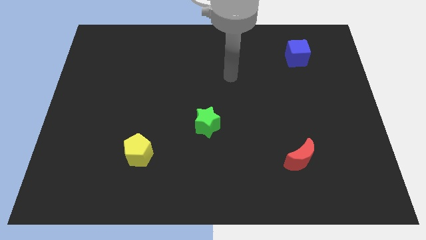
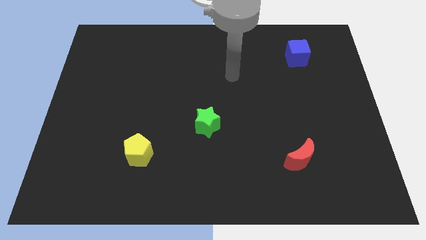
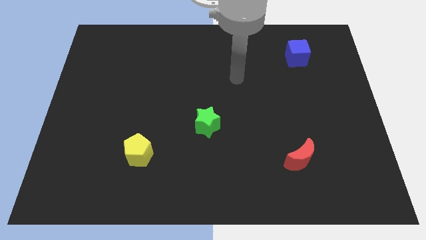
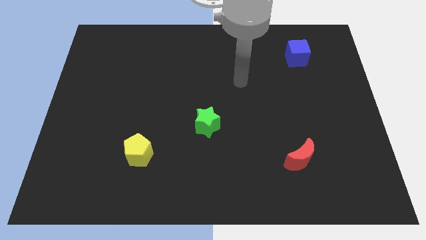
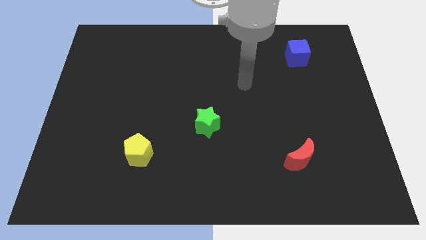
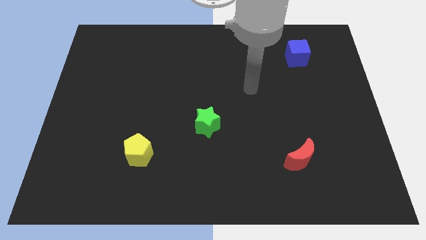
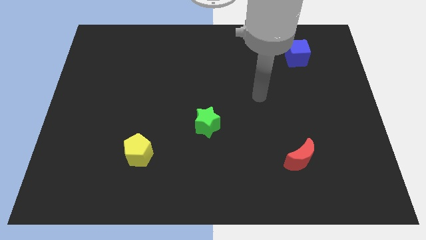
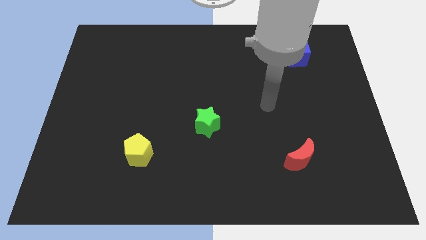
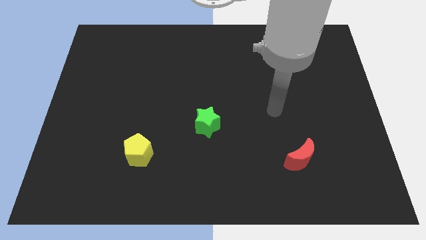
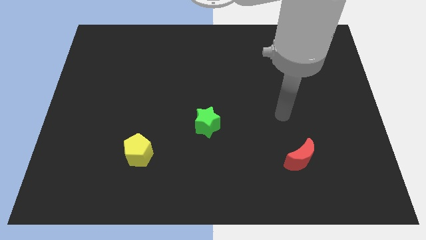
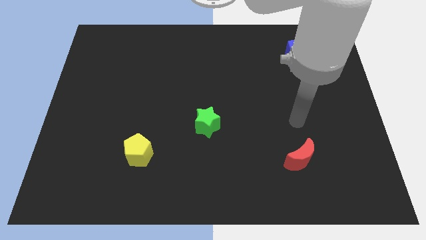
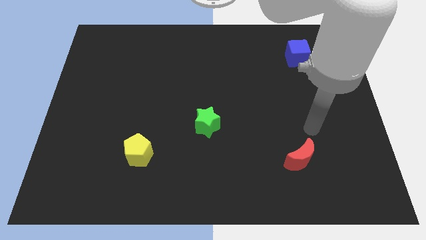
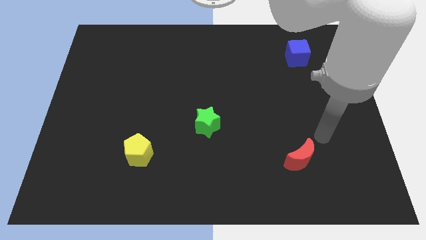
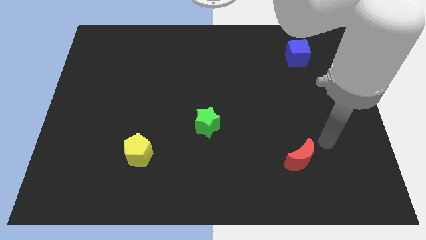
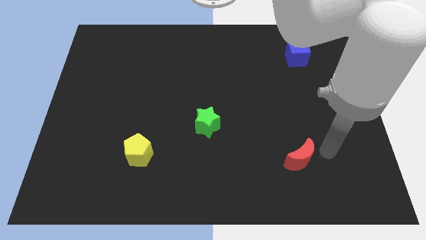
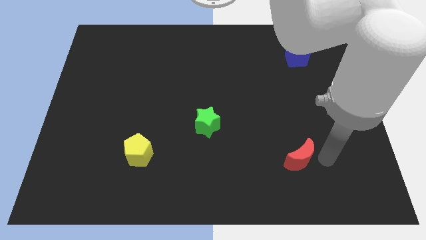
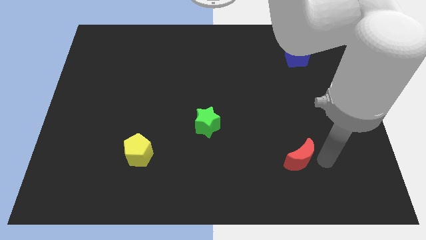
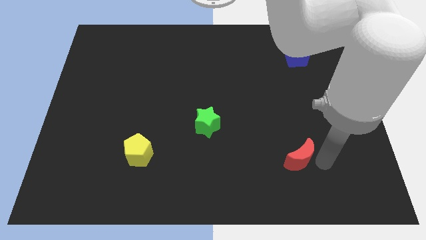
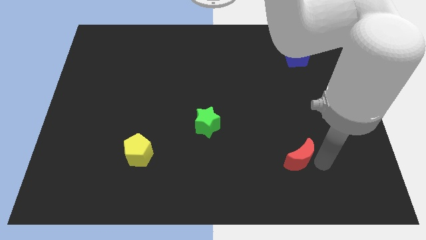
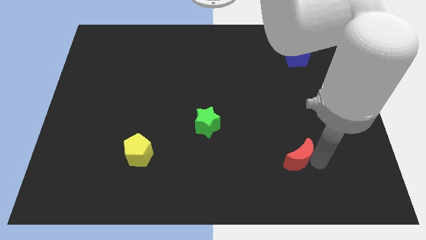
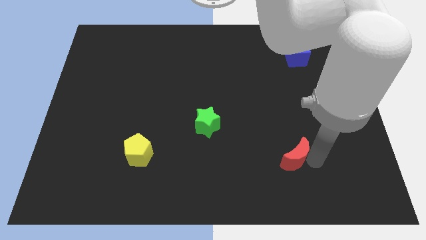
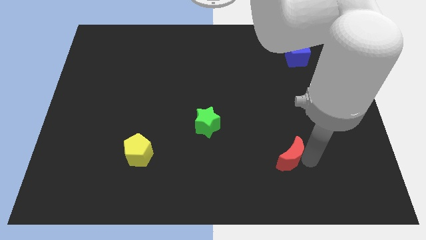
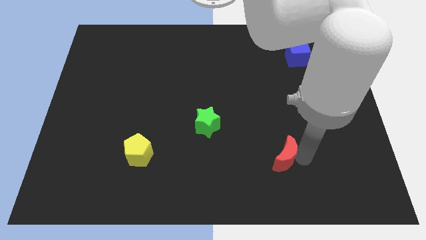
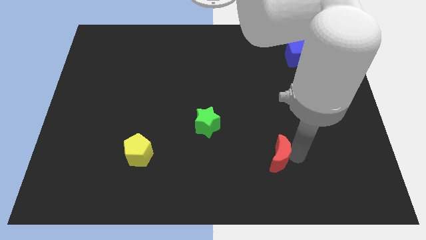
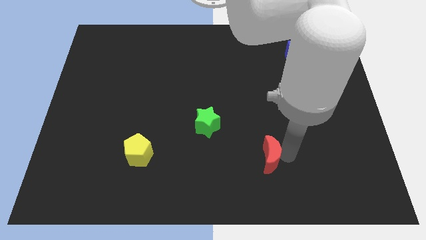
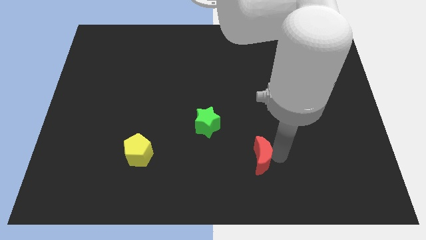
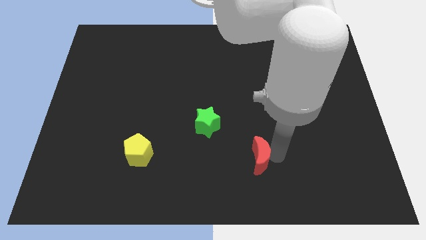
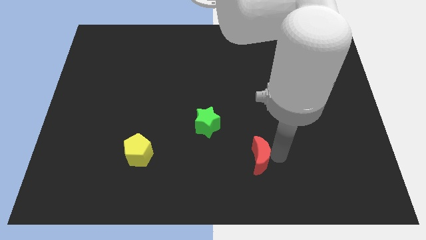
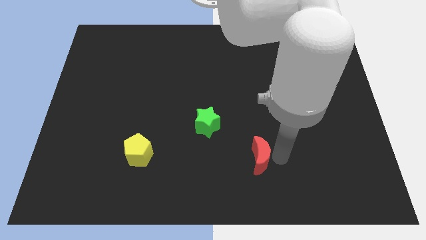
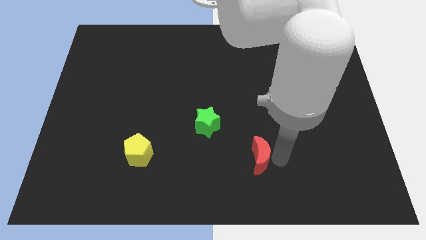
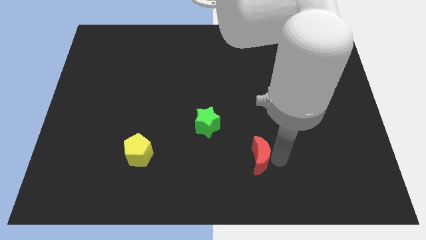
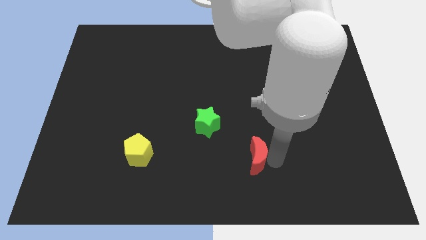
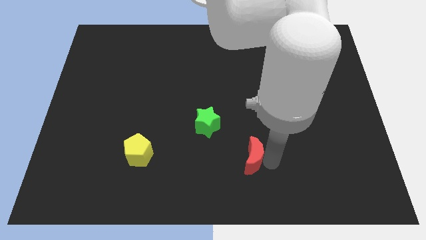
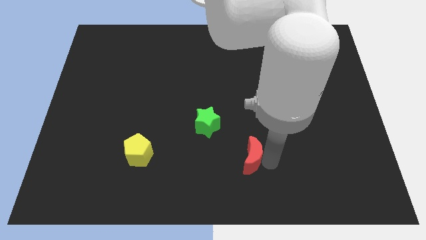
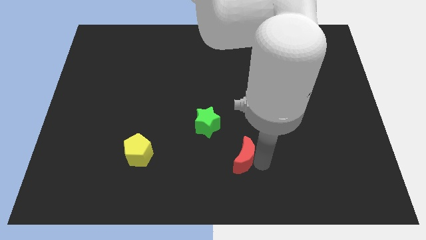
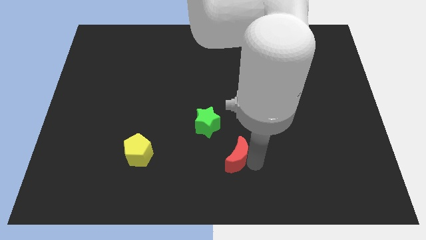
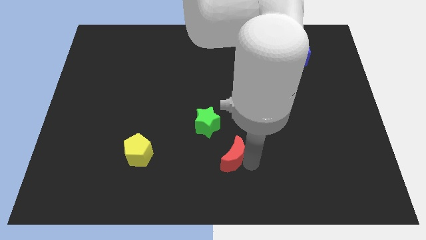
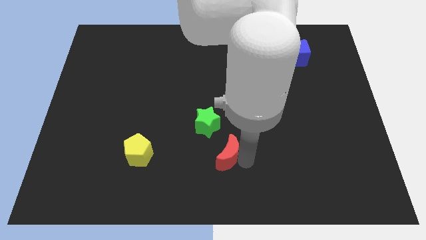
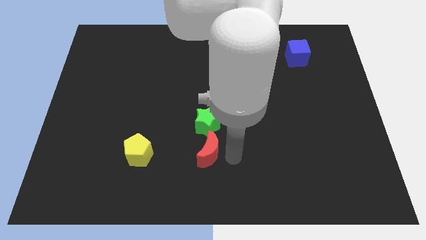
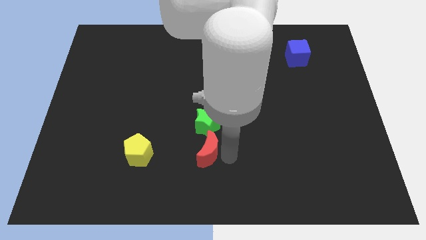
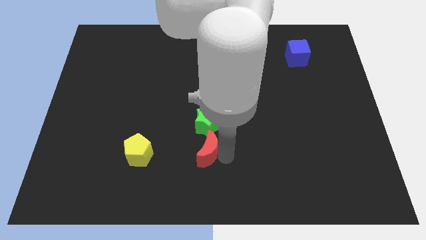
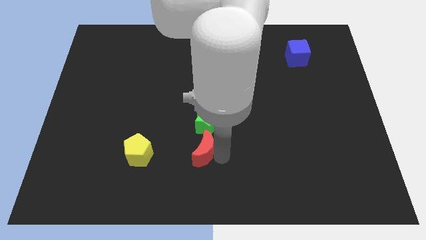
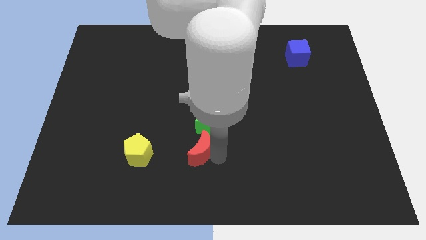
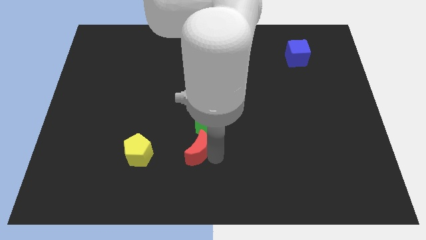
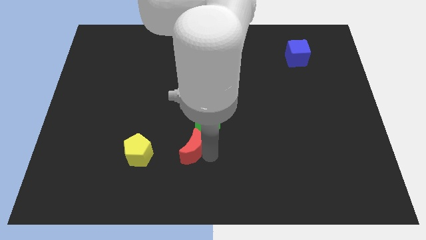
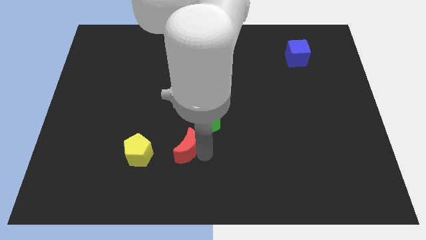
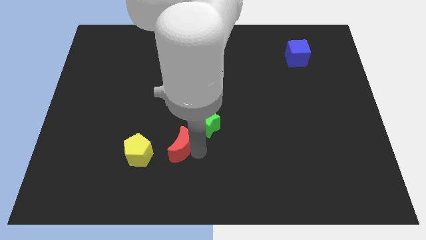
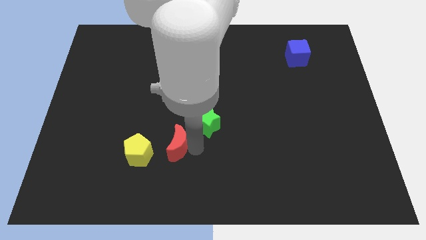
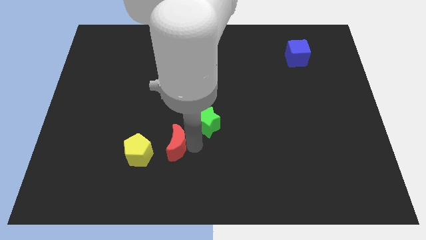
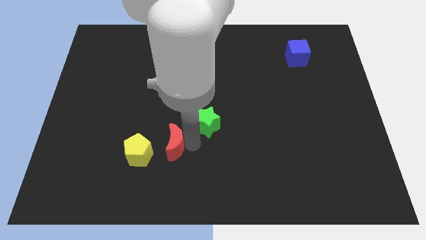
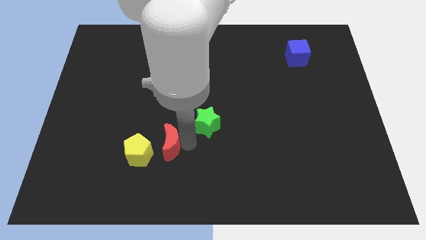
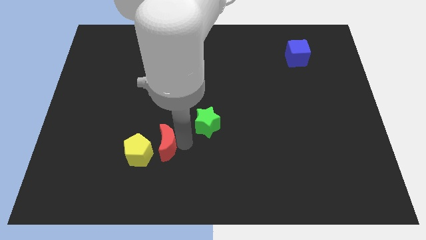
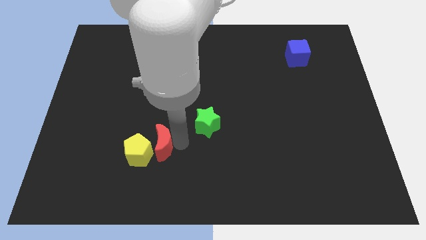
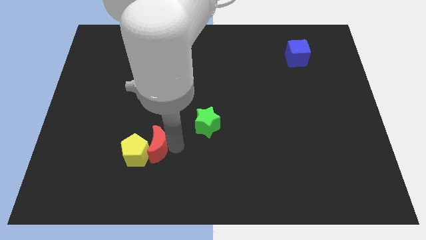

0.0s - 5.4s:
slide the moon close to the pentagon

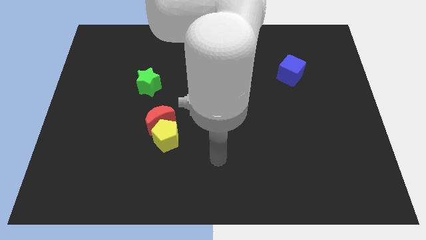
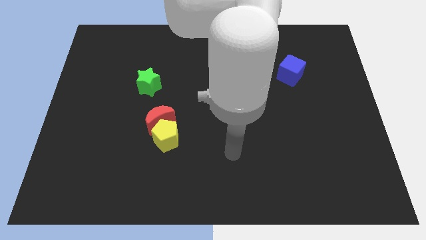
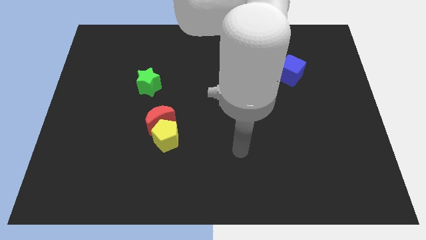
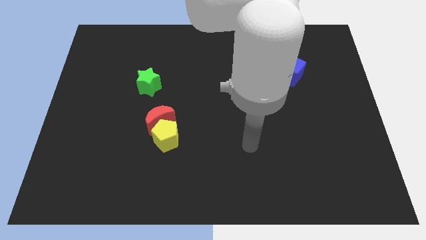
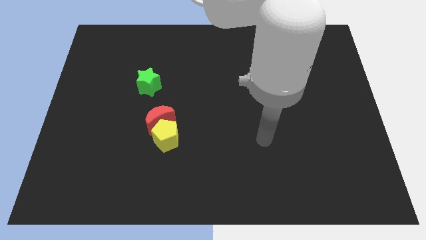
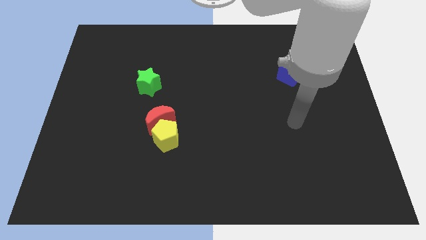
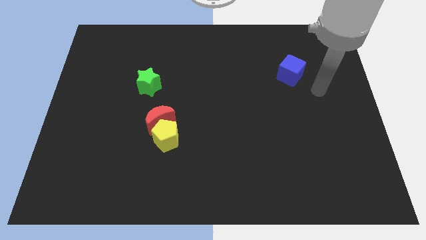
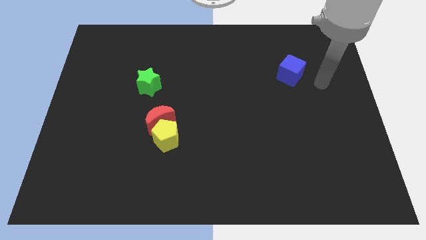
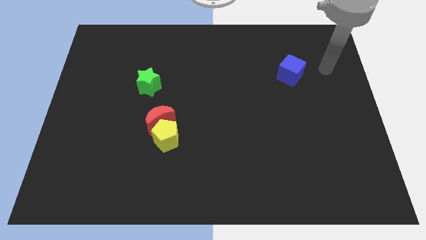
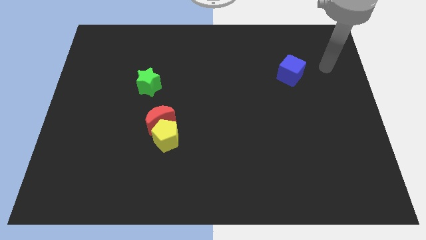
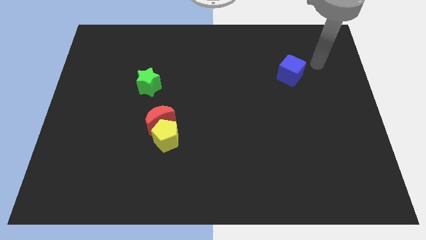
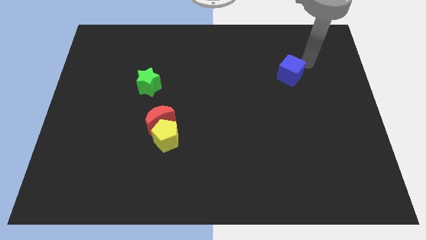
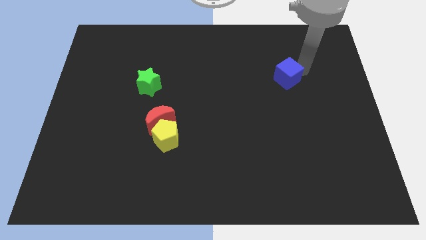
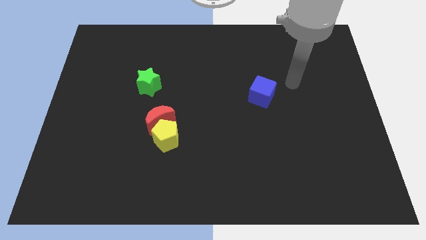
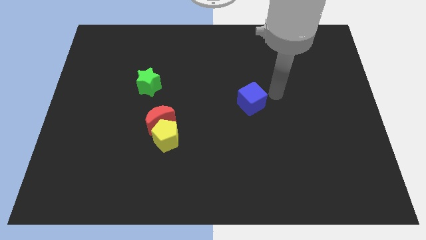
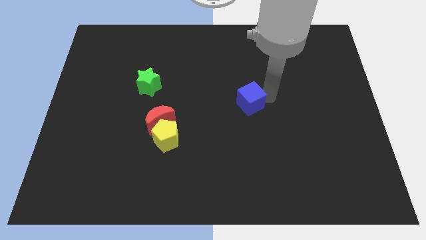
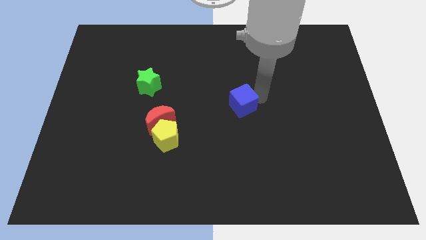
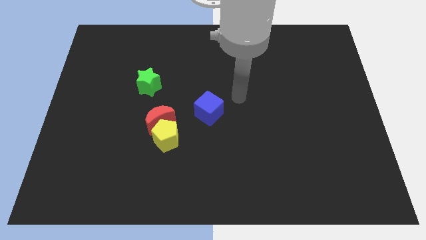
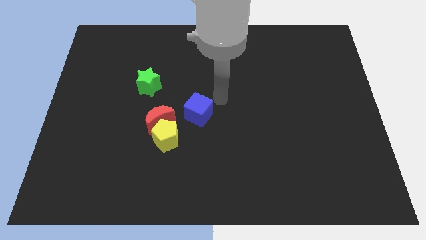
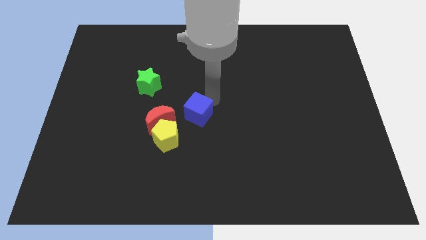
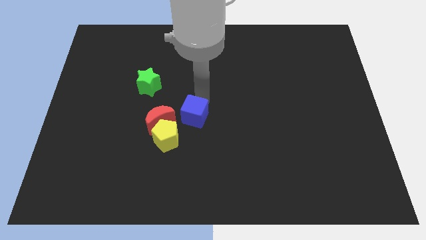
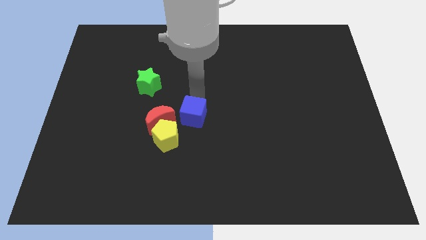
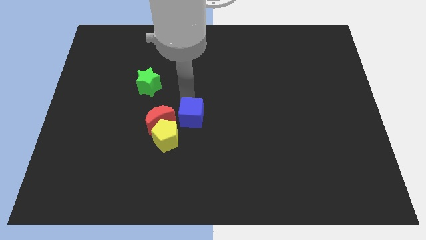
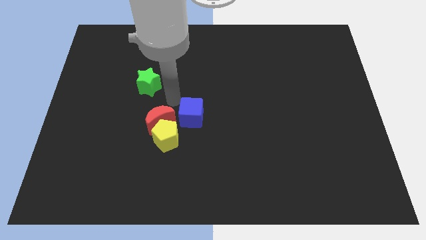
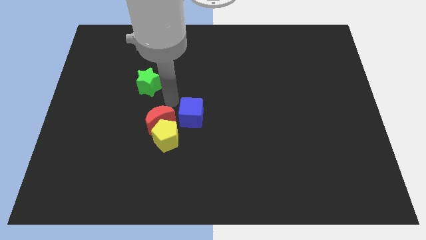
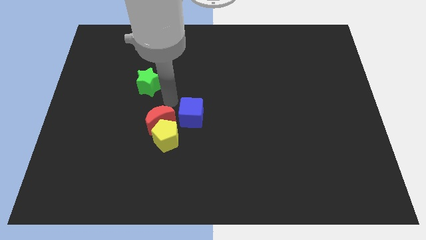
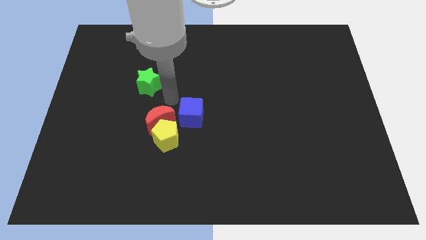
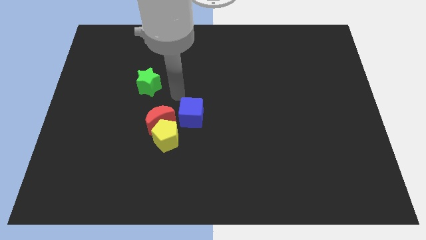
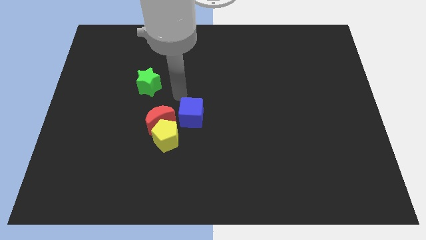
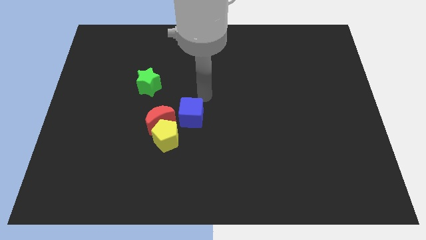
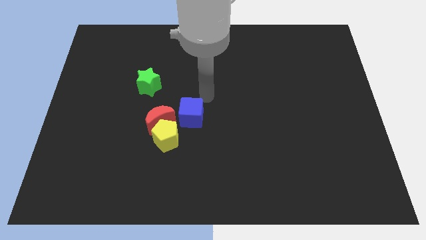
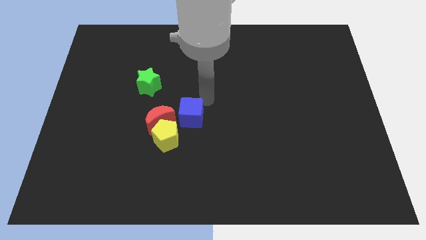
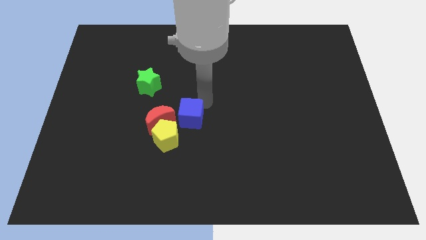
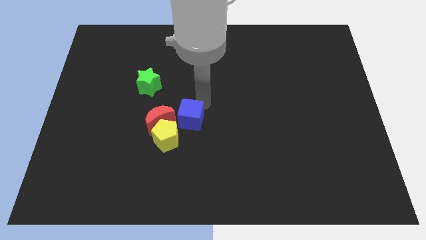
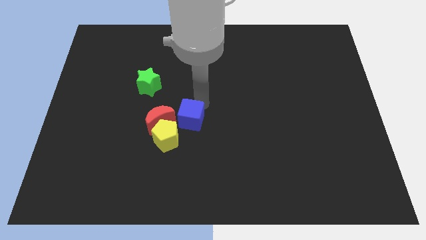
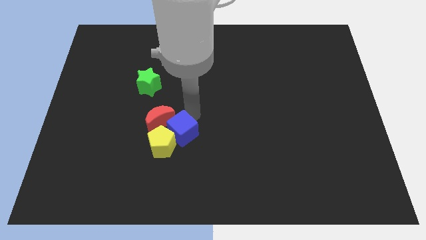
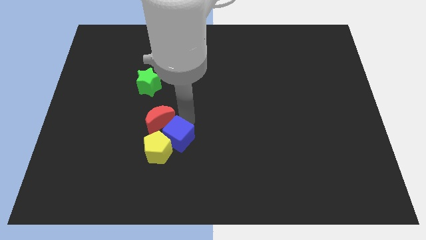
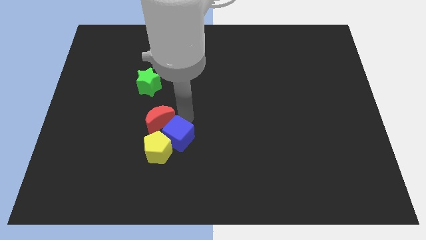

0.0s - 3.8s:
push the cube to the red moon
